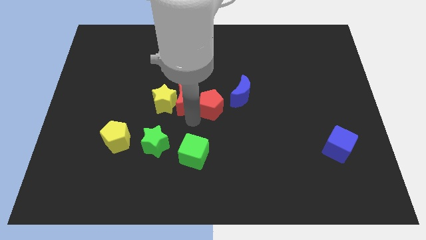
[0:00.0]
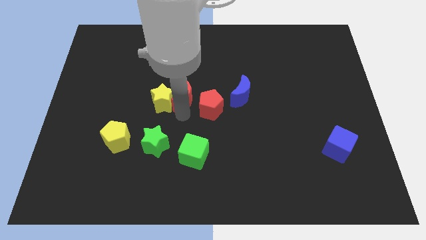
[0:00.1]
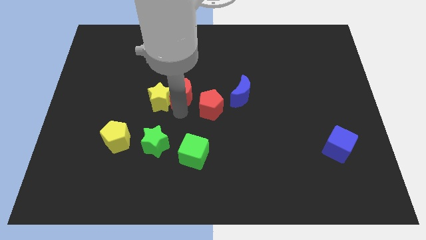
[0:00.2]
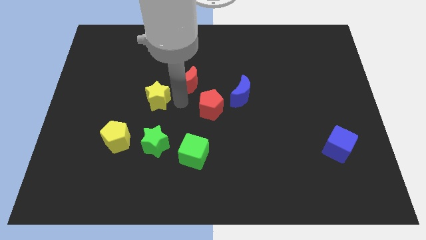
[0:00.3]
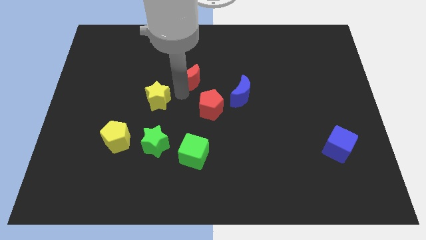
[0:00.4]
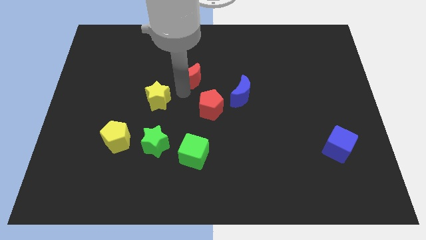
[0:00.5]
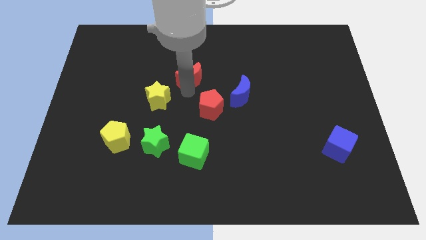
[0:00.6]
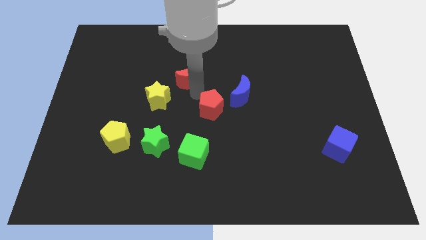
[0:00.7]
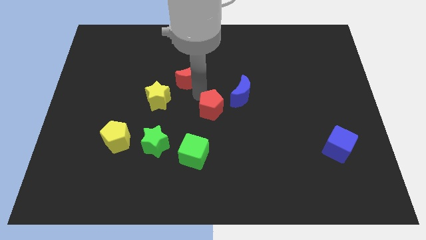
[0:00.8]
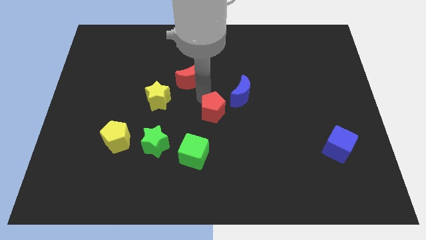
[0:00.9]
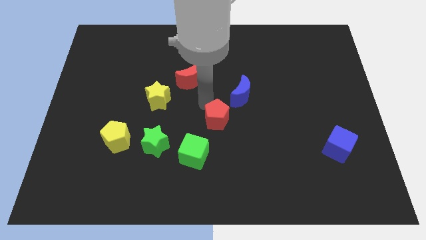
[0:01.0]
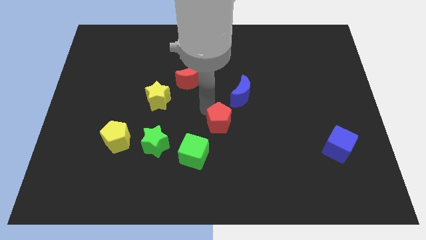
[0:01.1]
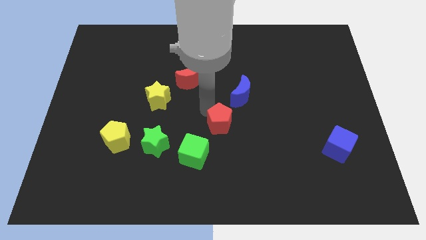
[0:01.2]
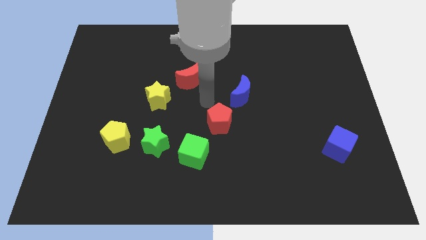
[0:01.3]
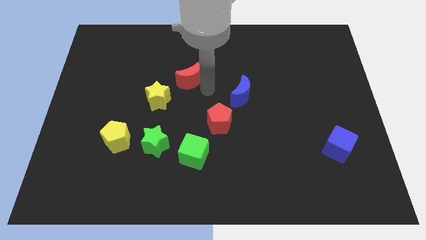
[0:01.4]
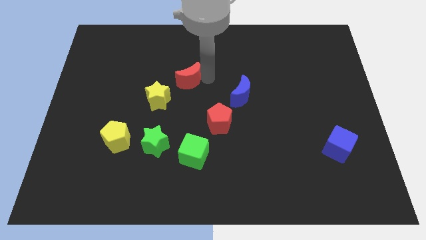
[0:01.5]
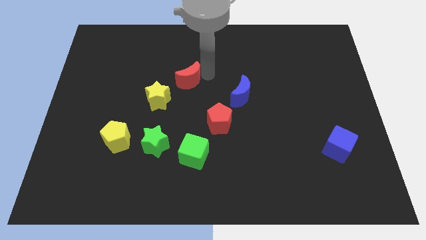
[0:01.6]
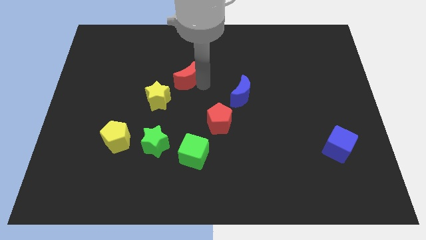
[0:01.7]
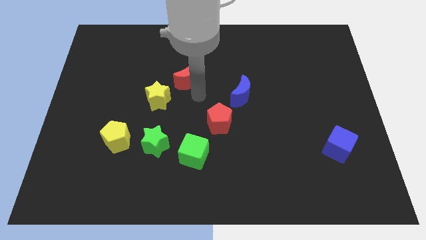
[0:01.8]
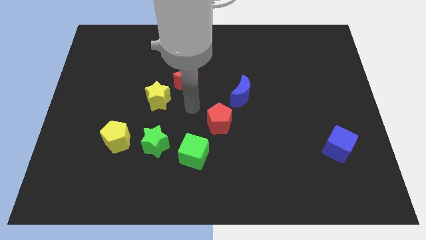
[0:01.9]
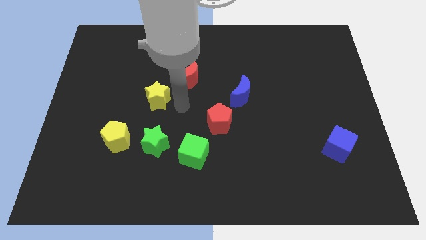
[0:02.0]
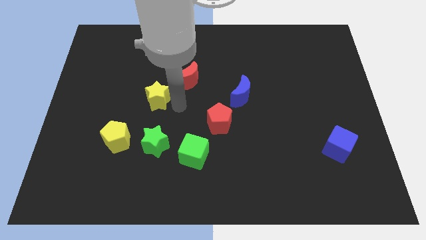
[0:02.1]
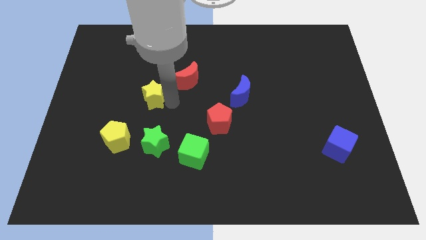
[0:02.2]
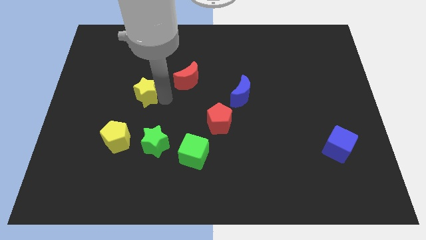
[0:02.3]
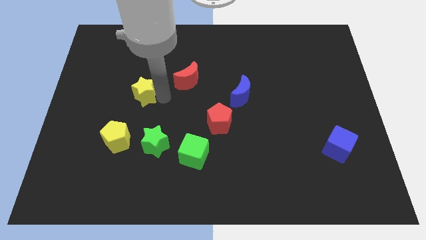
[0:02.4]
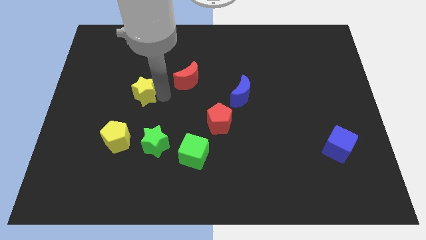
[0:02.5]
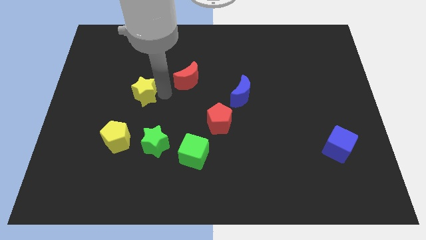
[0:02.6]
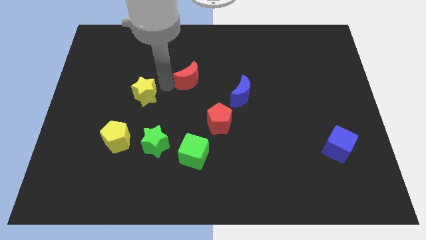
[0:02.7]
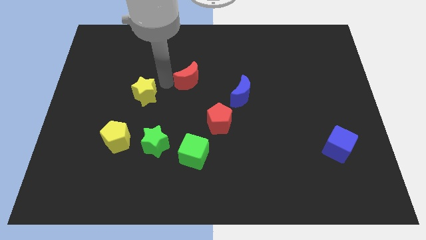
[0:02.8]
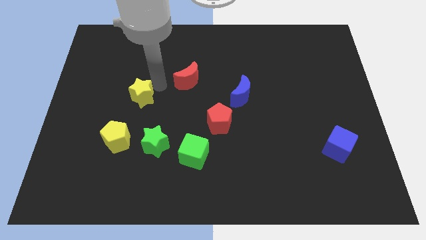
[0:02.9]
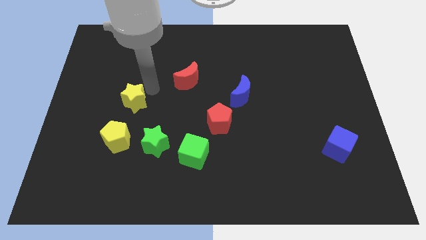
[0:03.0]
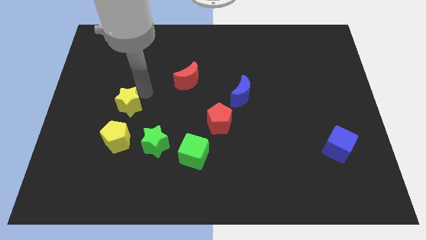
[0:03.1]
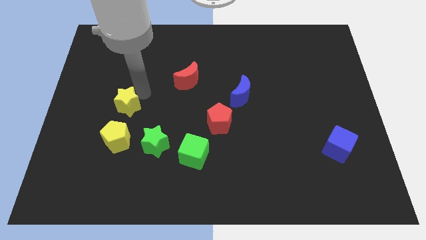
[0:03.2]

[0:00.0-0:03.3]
make a triangle with red crescent yellow star and the red pentagon

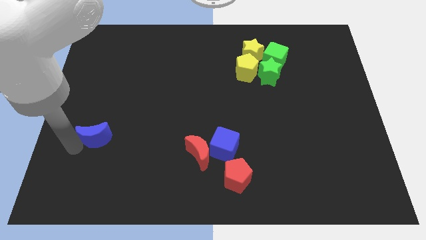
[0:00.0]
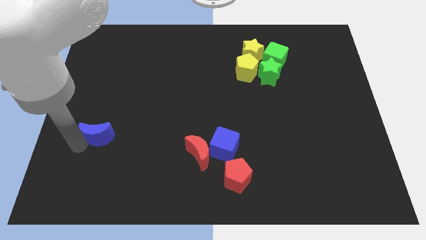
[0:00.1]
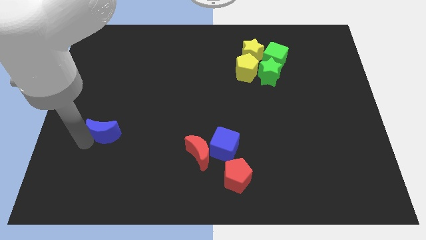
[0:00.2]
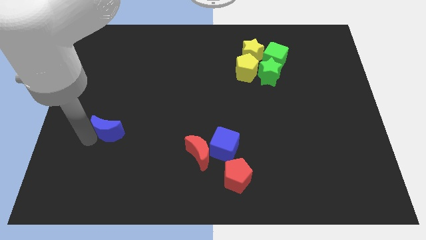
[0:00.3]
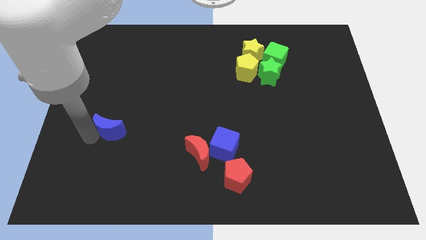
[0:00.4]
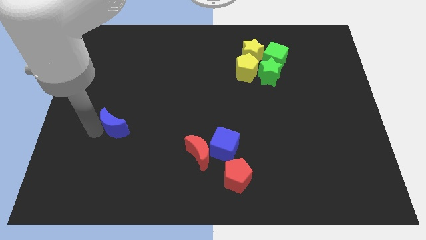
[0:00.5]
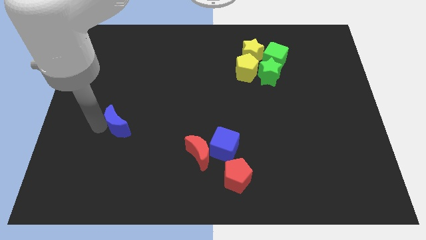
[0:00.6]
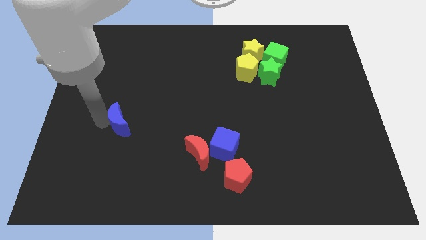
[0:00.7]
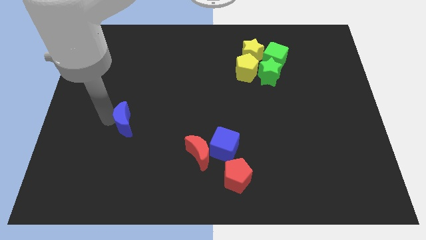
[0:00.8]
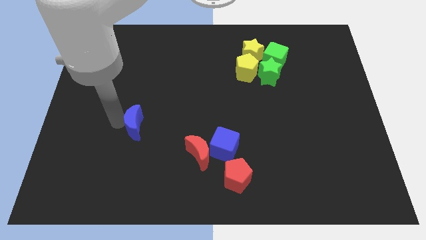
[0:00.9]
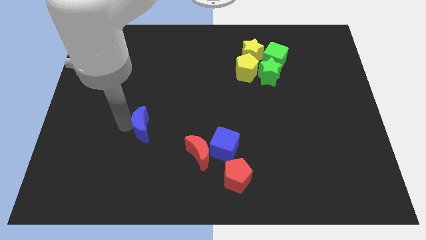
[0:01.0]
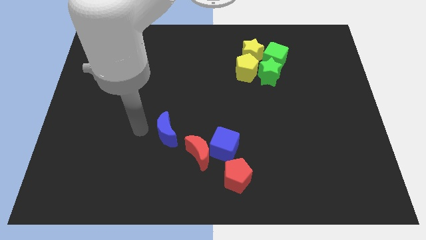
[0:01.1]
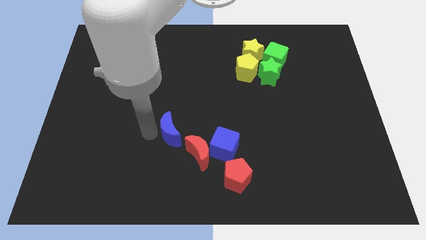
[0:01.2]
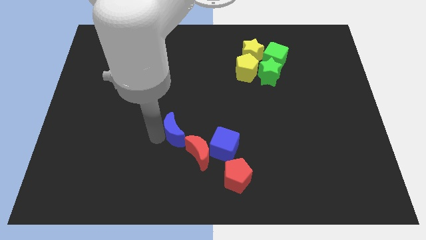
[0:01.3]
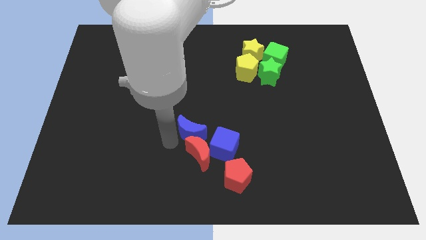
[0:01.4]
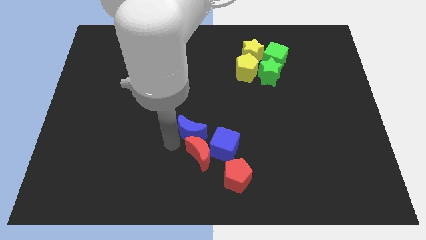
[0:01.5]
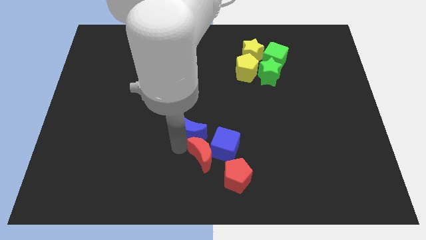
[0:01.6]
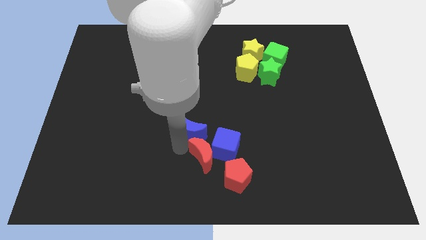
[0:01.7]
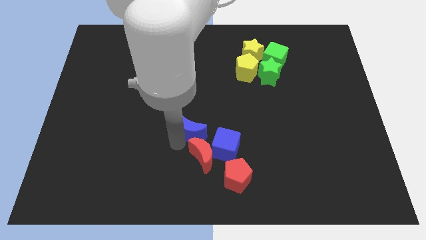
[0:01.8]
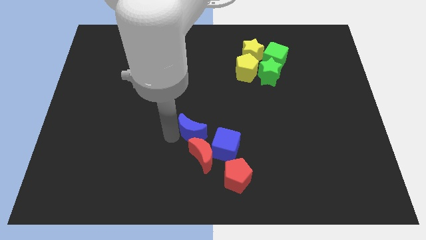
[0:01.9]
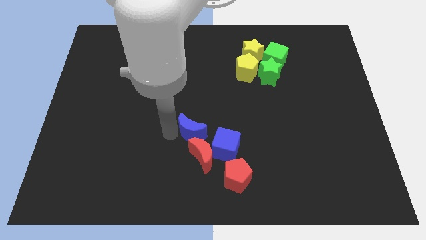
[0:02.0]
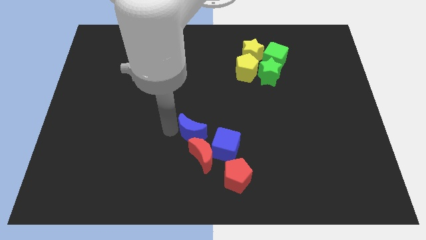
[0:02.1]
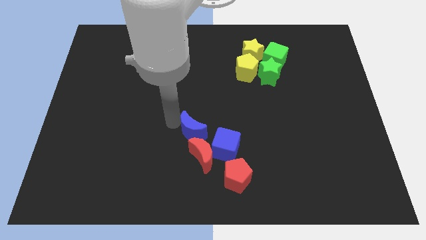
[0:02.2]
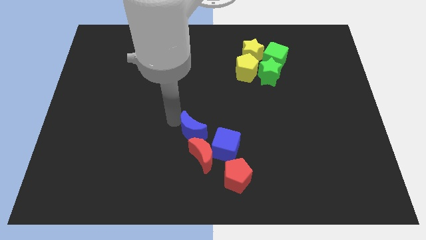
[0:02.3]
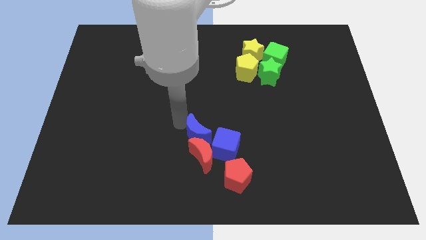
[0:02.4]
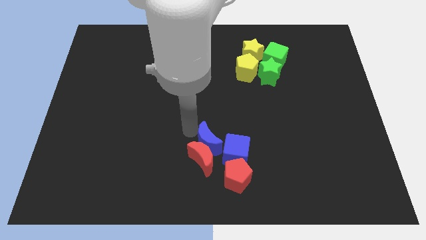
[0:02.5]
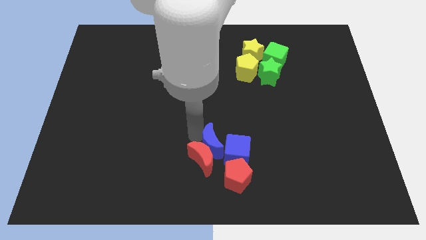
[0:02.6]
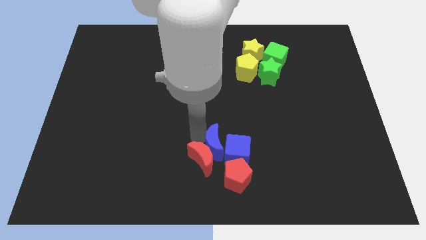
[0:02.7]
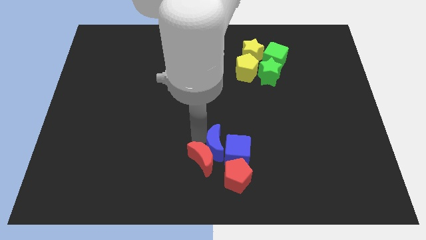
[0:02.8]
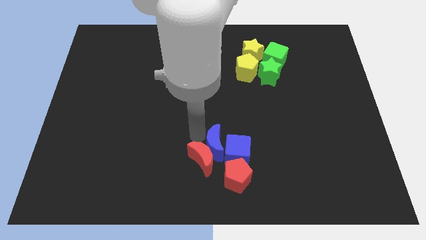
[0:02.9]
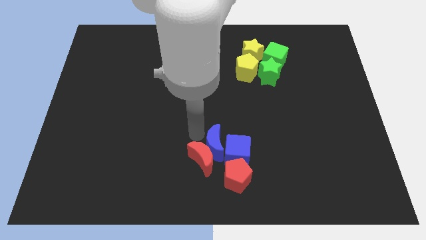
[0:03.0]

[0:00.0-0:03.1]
move the blue moon into a group of blocks

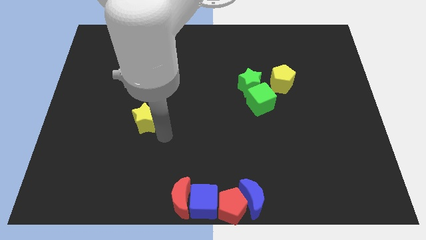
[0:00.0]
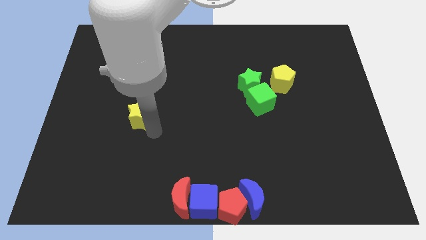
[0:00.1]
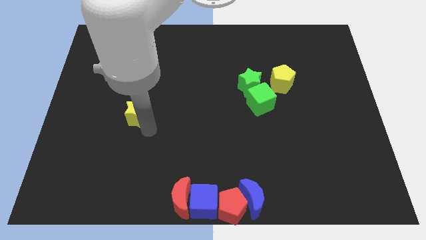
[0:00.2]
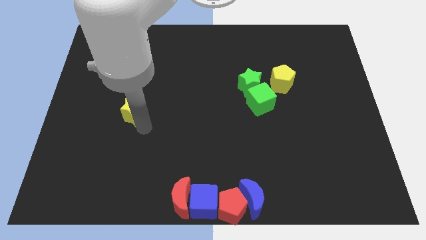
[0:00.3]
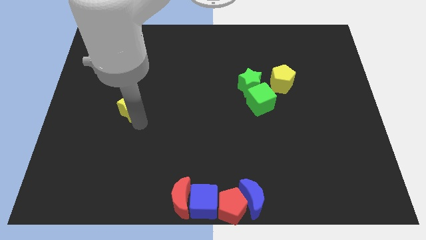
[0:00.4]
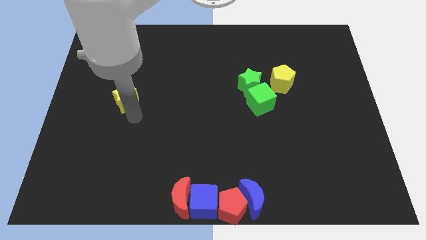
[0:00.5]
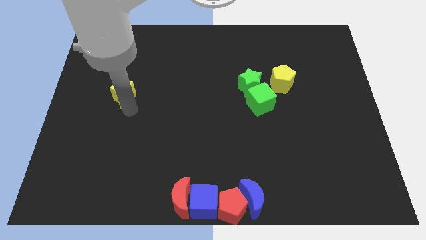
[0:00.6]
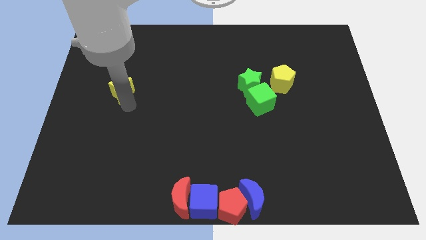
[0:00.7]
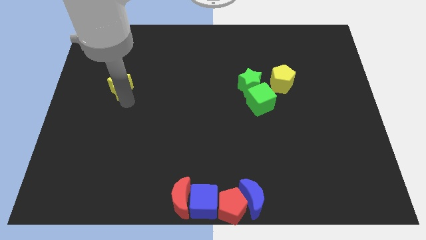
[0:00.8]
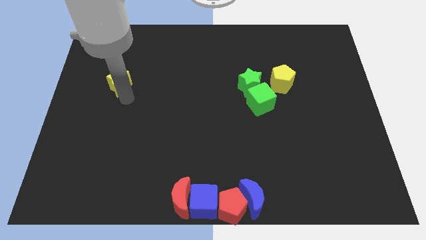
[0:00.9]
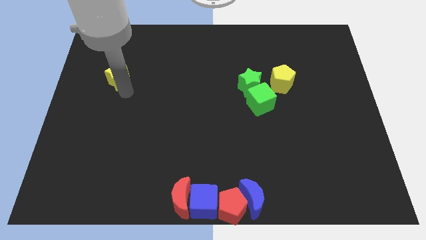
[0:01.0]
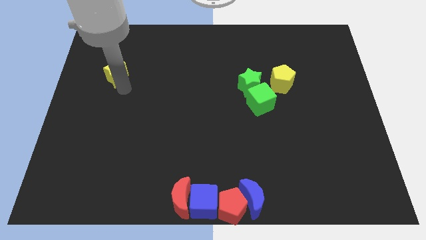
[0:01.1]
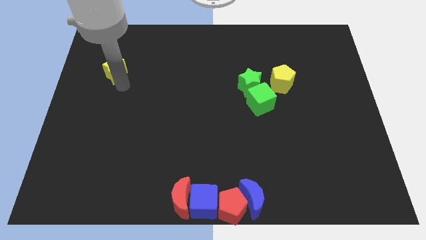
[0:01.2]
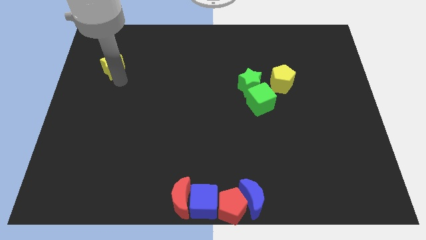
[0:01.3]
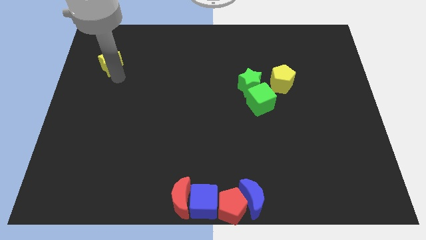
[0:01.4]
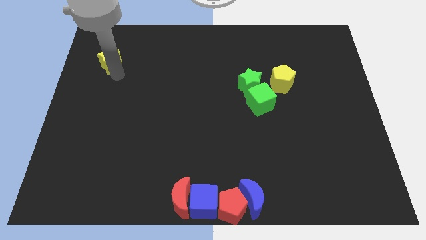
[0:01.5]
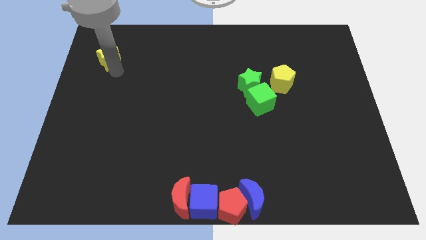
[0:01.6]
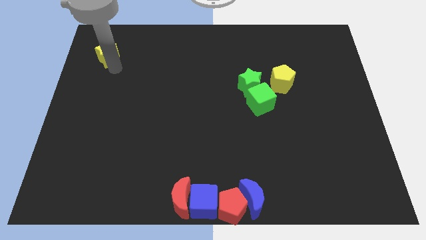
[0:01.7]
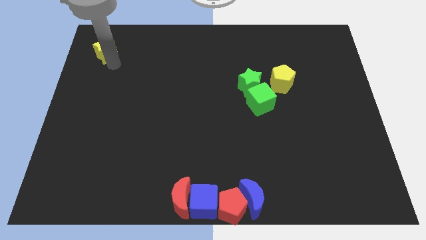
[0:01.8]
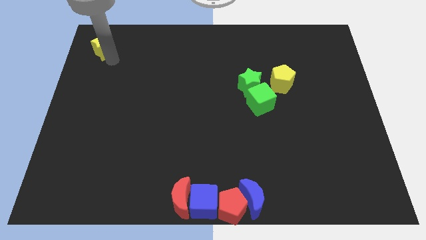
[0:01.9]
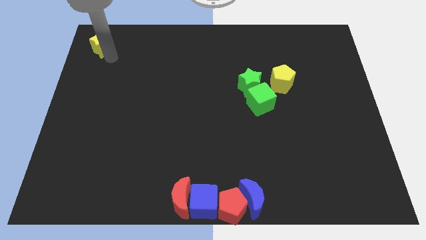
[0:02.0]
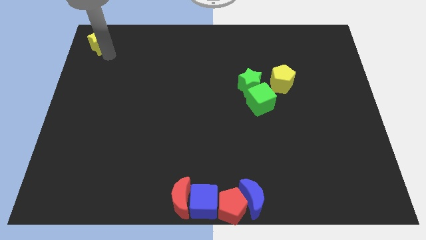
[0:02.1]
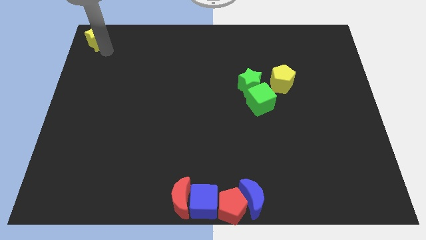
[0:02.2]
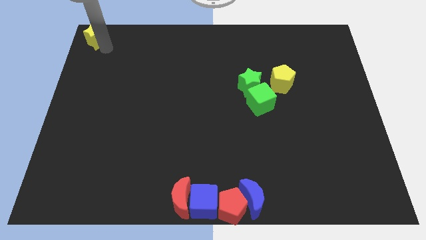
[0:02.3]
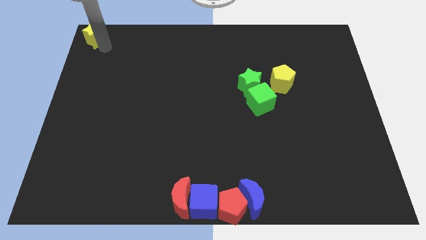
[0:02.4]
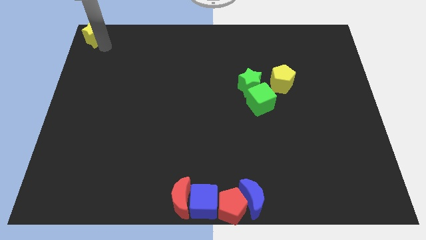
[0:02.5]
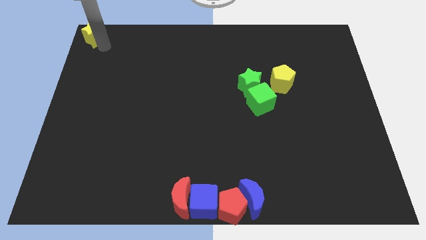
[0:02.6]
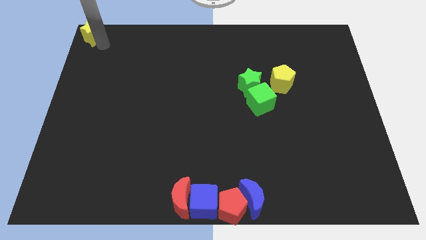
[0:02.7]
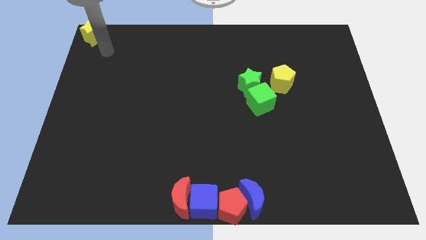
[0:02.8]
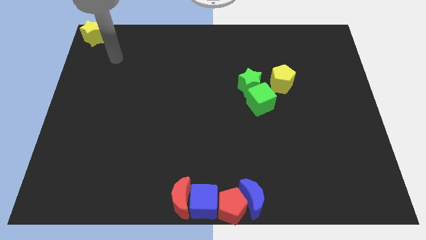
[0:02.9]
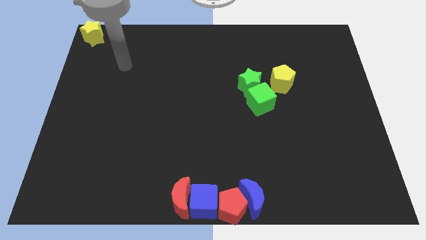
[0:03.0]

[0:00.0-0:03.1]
move yellow star to the top left
